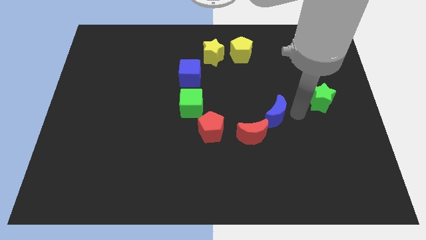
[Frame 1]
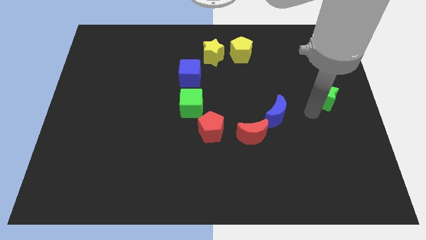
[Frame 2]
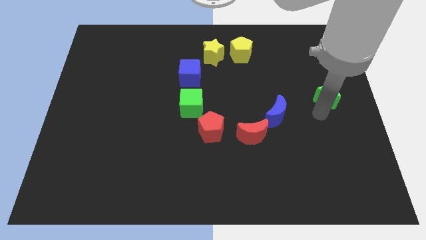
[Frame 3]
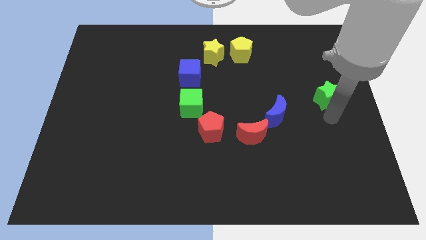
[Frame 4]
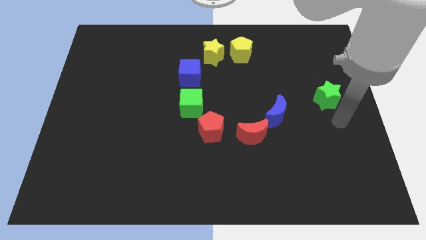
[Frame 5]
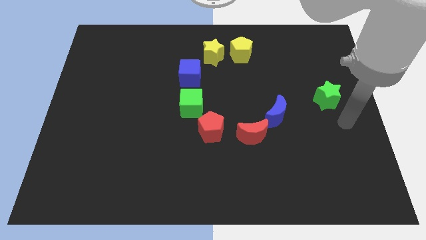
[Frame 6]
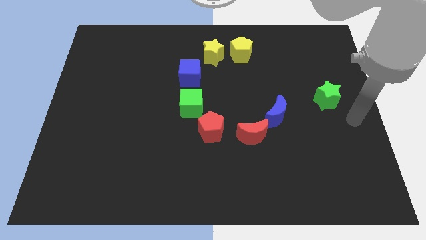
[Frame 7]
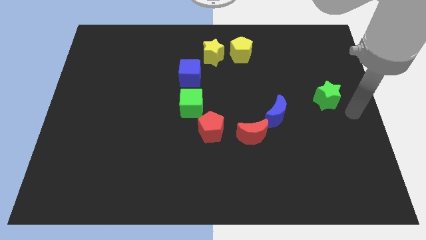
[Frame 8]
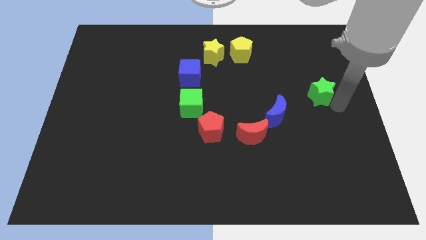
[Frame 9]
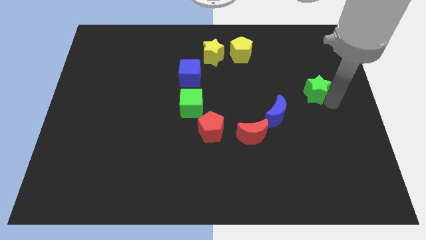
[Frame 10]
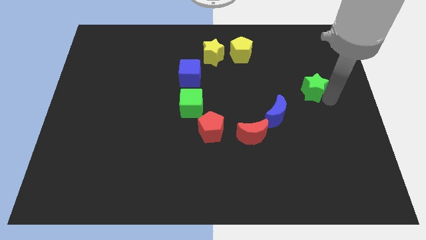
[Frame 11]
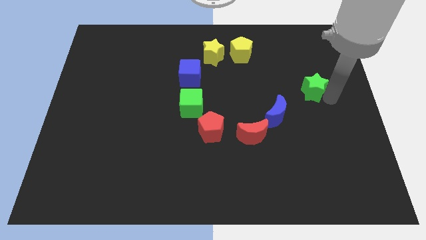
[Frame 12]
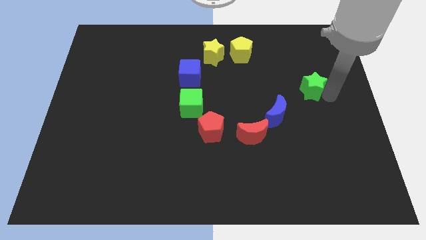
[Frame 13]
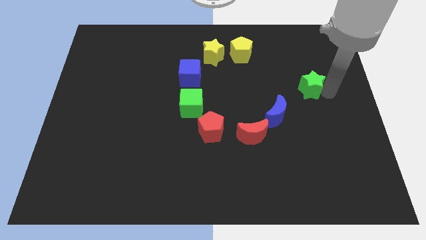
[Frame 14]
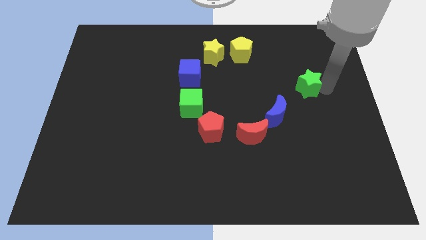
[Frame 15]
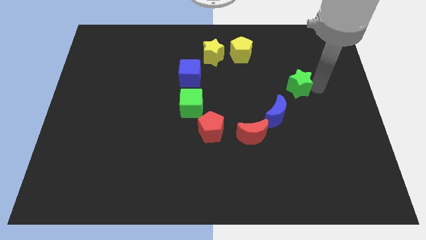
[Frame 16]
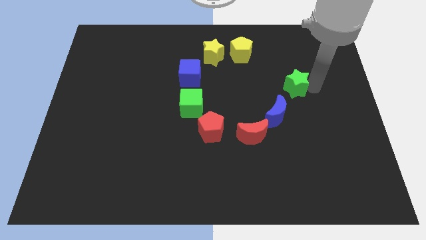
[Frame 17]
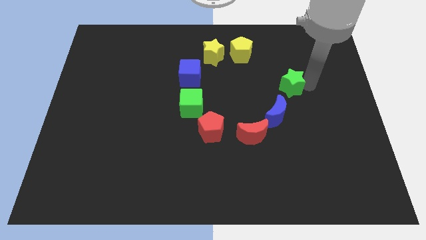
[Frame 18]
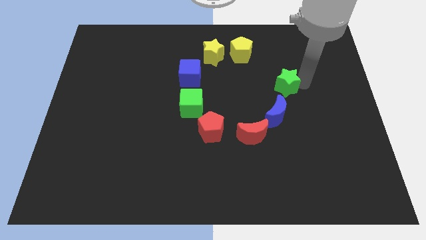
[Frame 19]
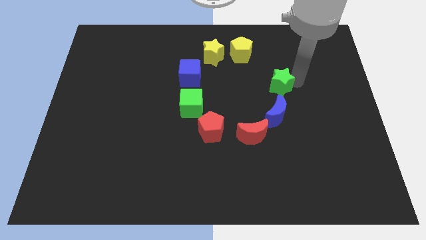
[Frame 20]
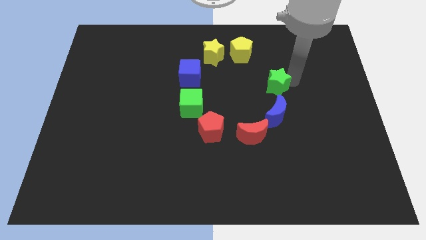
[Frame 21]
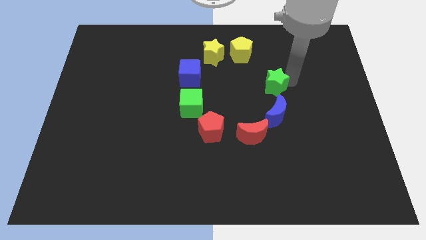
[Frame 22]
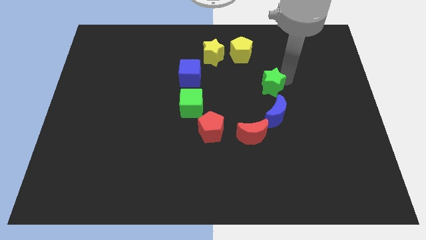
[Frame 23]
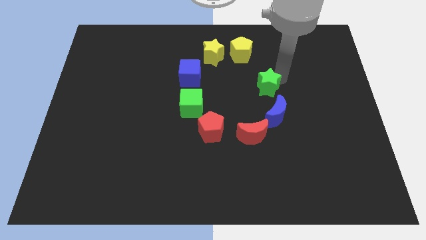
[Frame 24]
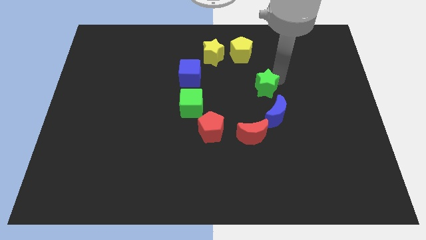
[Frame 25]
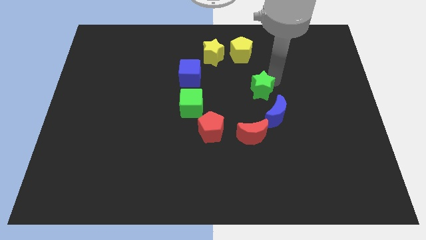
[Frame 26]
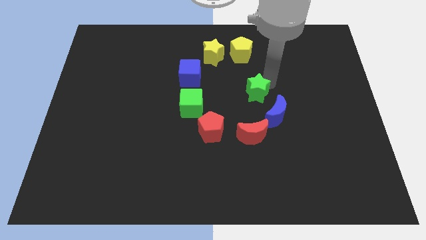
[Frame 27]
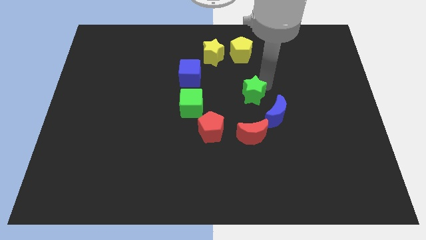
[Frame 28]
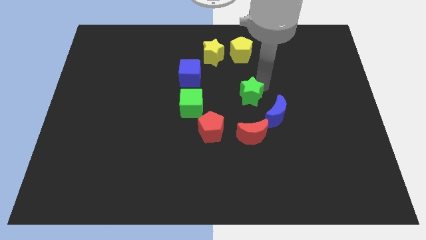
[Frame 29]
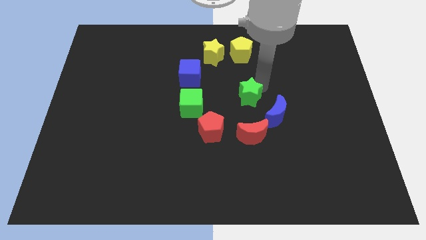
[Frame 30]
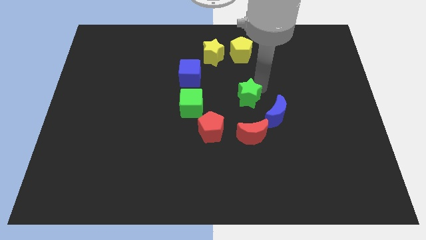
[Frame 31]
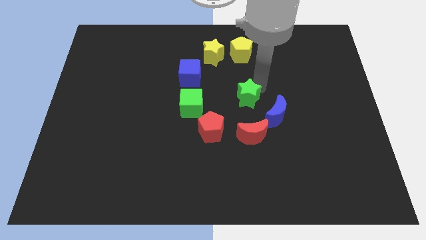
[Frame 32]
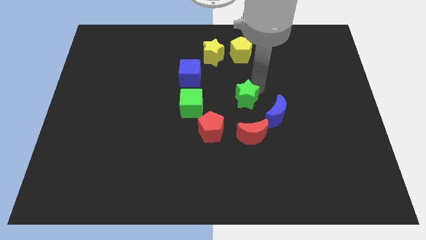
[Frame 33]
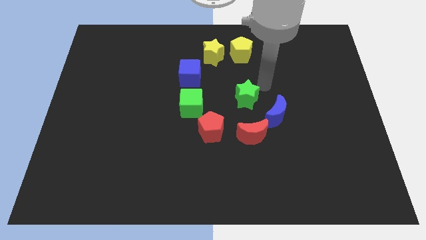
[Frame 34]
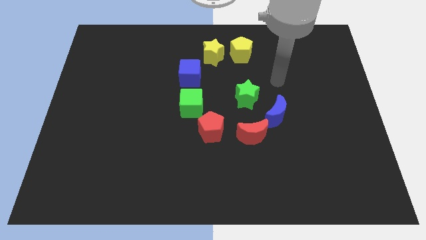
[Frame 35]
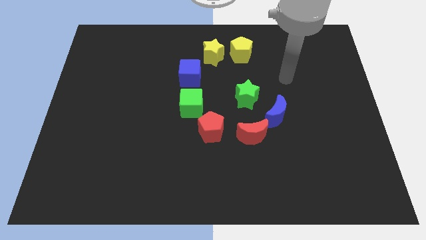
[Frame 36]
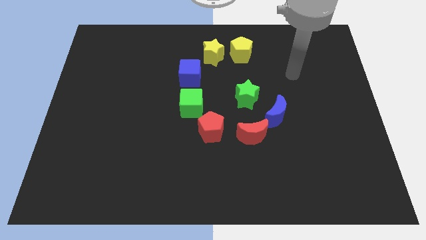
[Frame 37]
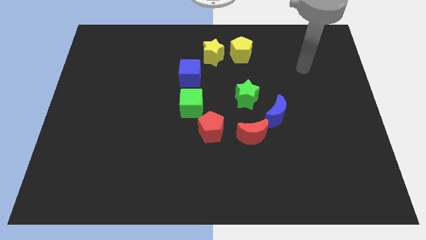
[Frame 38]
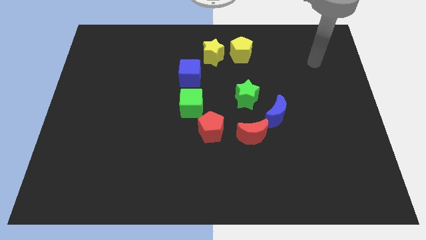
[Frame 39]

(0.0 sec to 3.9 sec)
move the green star to the center of the board

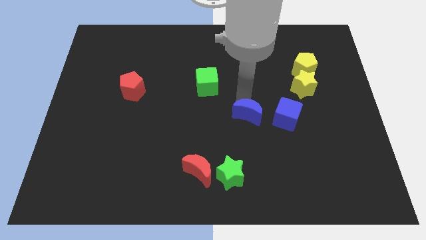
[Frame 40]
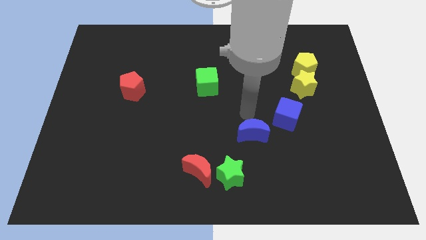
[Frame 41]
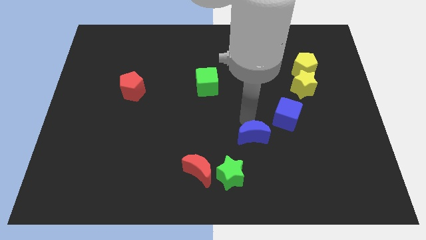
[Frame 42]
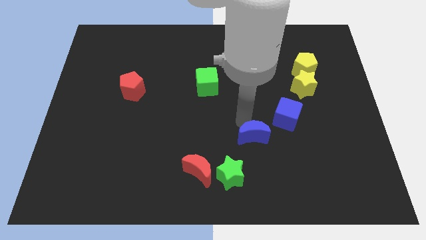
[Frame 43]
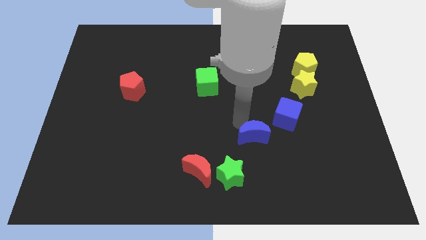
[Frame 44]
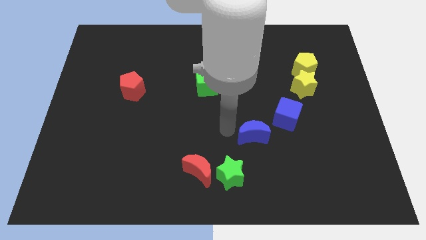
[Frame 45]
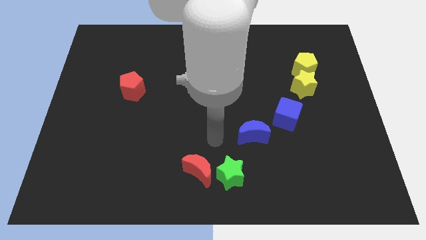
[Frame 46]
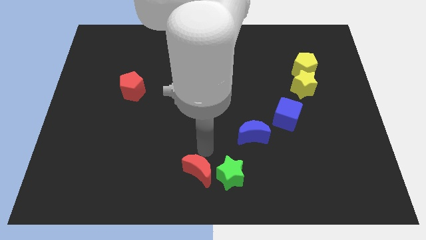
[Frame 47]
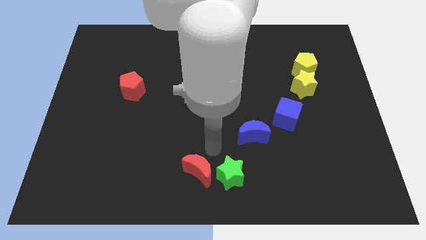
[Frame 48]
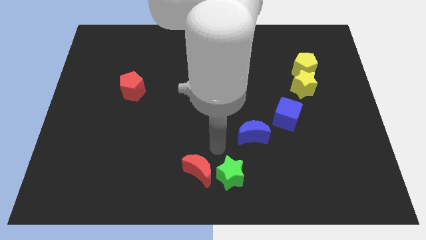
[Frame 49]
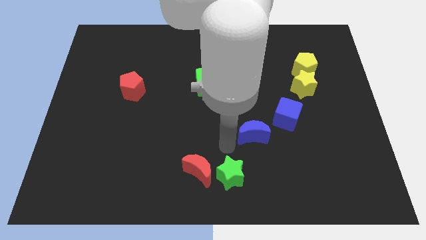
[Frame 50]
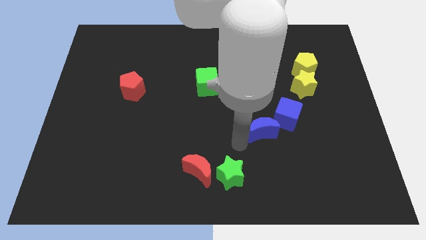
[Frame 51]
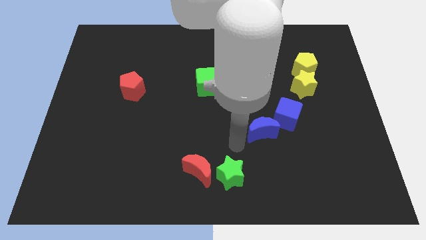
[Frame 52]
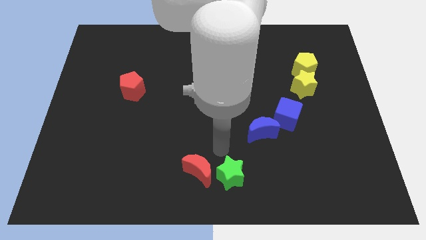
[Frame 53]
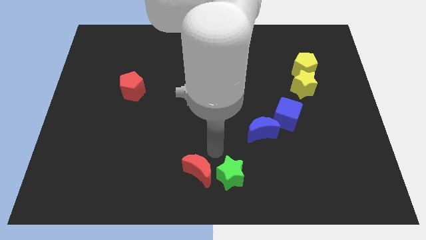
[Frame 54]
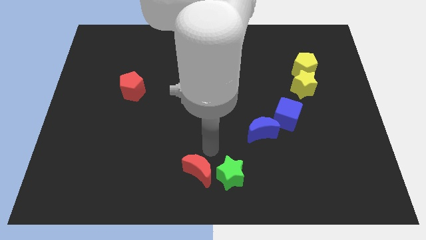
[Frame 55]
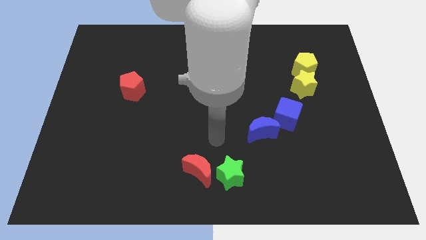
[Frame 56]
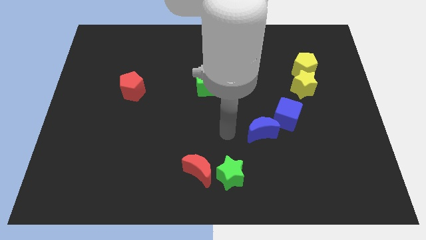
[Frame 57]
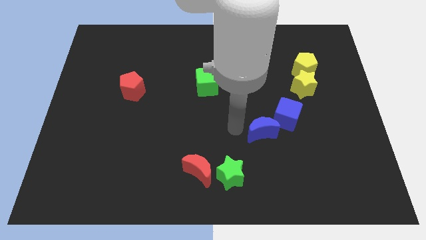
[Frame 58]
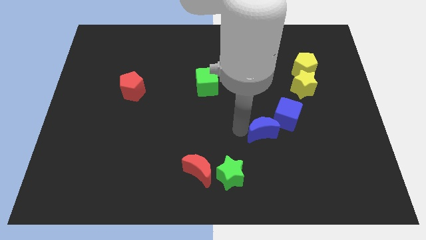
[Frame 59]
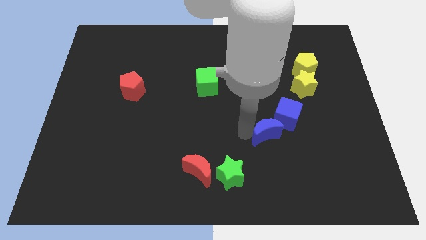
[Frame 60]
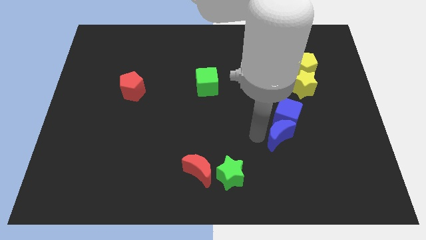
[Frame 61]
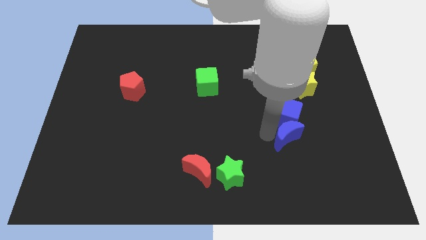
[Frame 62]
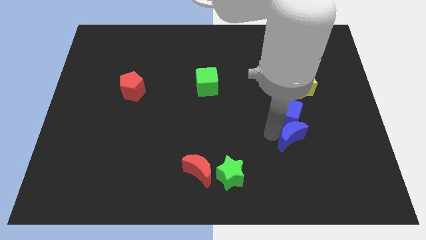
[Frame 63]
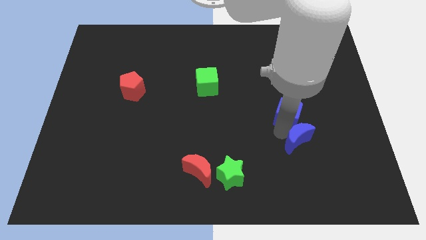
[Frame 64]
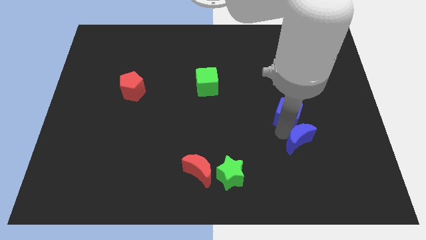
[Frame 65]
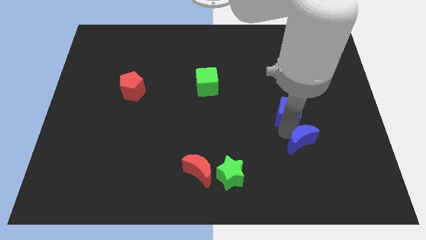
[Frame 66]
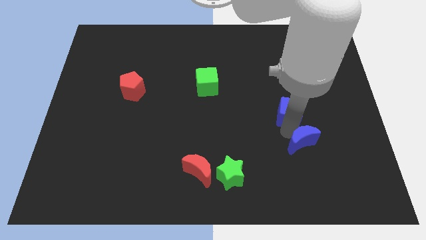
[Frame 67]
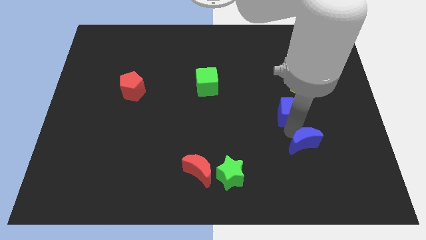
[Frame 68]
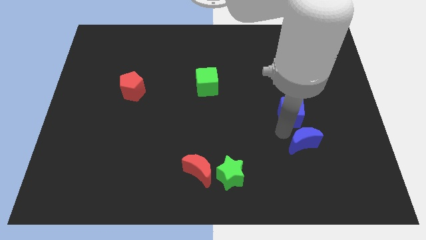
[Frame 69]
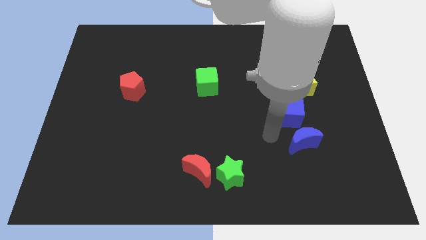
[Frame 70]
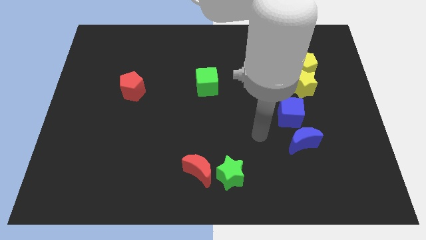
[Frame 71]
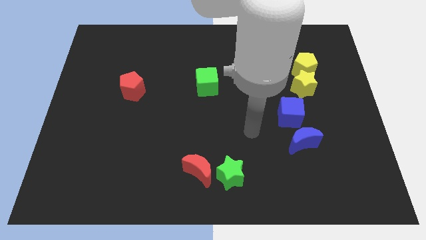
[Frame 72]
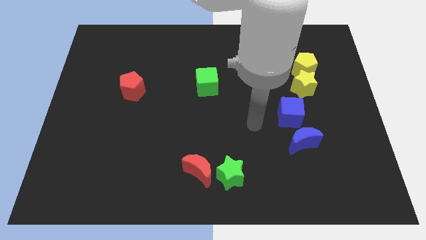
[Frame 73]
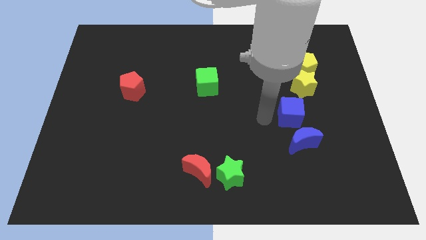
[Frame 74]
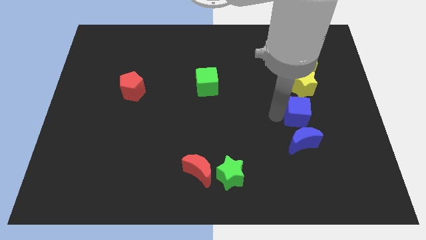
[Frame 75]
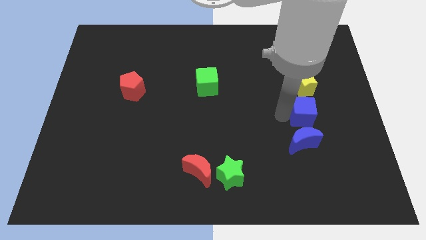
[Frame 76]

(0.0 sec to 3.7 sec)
push the blue moon into the blue cube

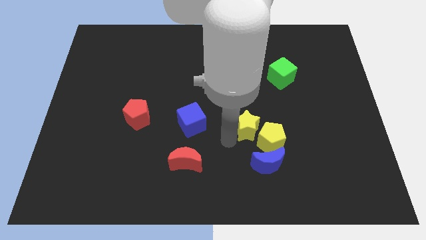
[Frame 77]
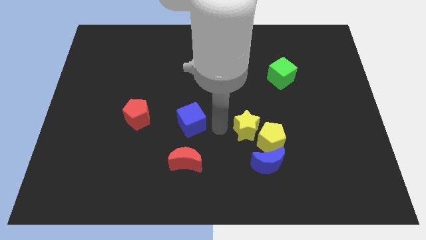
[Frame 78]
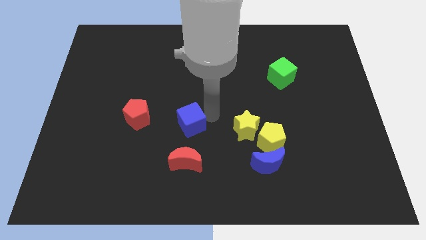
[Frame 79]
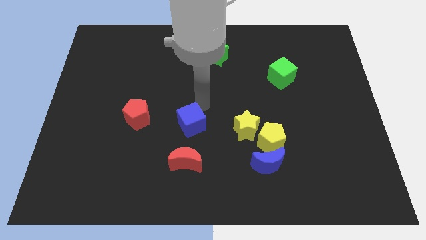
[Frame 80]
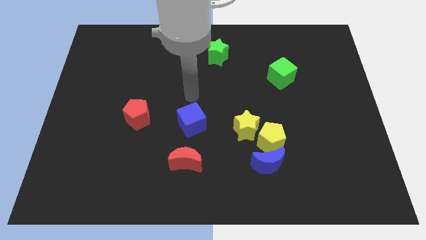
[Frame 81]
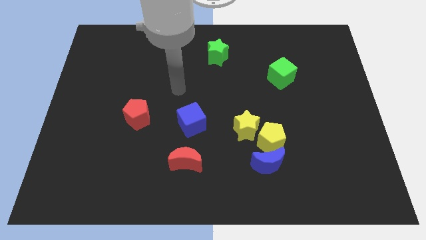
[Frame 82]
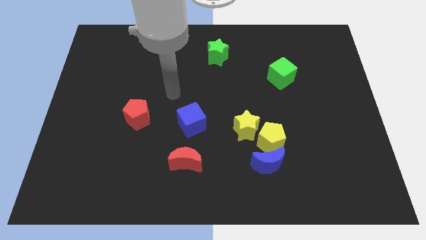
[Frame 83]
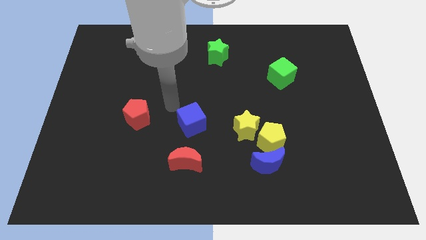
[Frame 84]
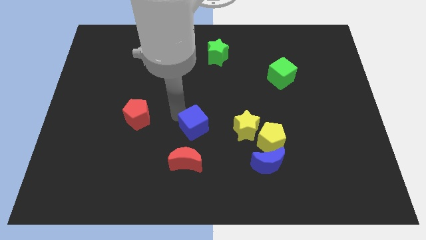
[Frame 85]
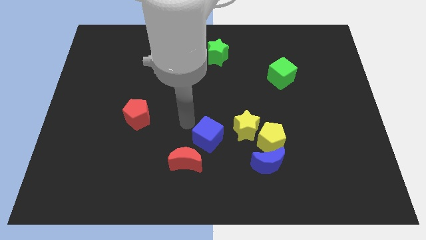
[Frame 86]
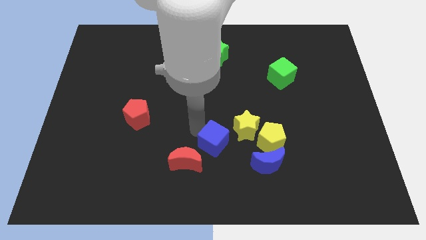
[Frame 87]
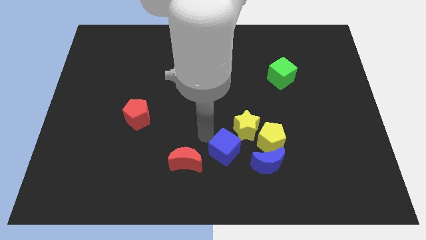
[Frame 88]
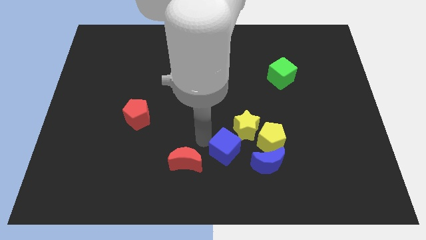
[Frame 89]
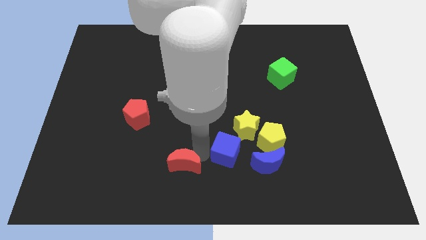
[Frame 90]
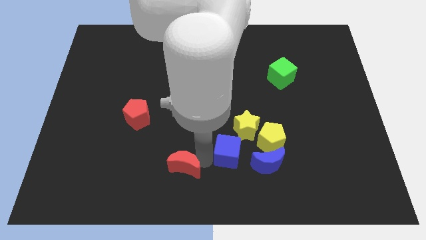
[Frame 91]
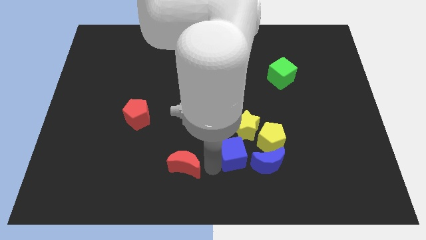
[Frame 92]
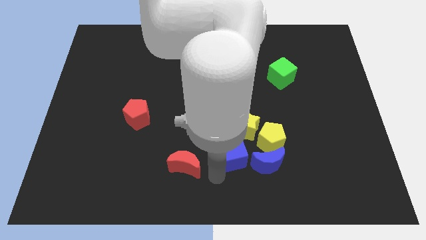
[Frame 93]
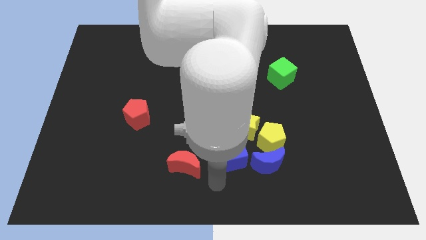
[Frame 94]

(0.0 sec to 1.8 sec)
put the blue cube left to the blue moon
